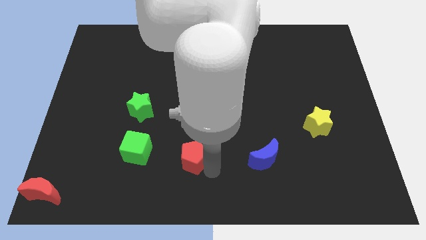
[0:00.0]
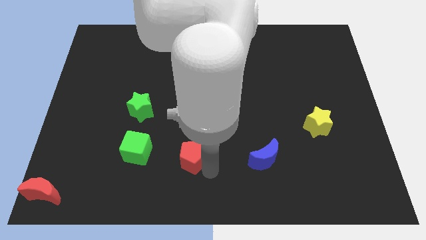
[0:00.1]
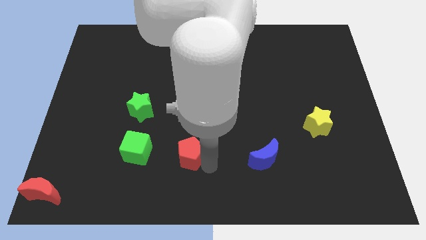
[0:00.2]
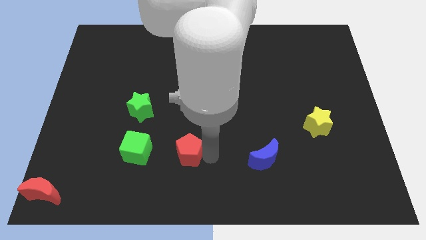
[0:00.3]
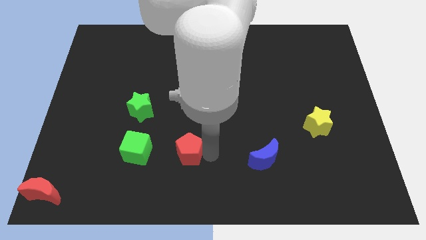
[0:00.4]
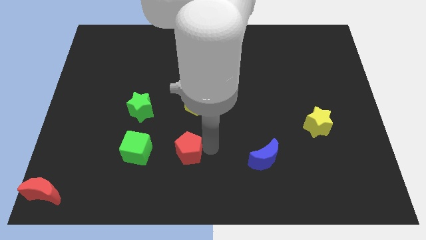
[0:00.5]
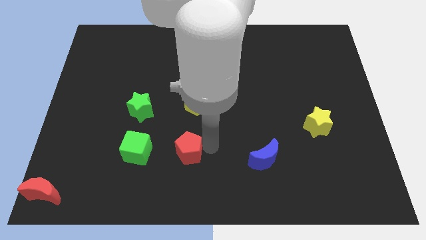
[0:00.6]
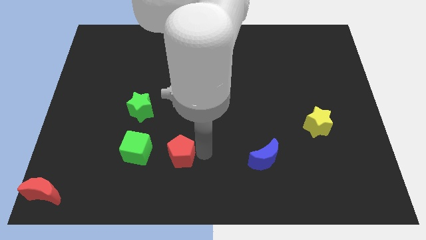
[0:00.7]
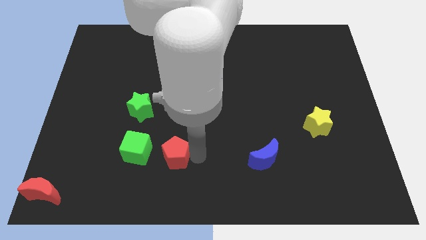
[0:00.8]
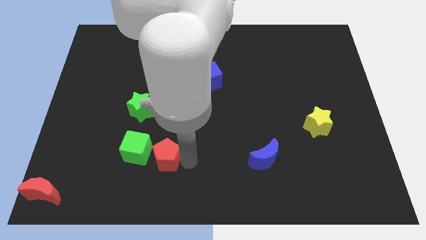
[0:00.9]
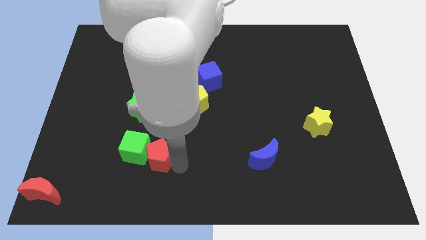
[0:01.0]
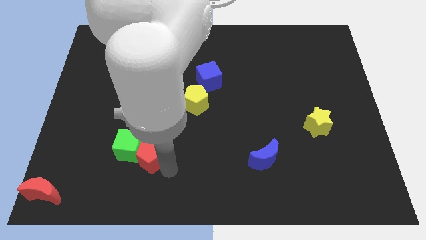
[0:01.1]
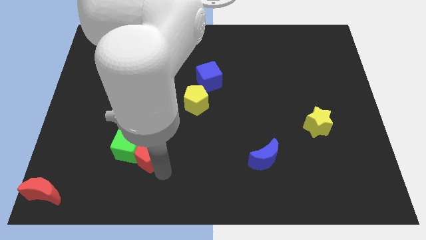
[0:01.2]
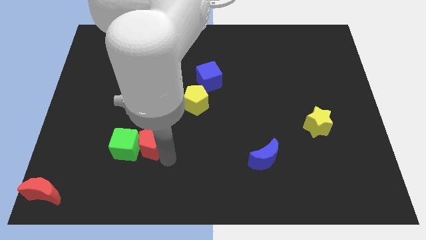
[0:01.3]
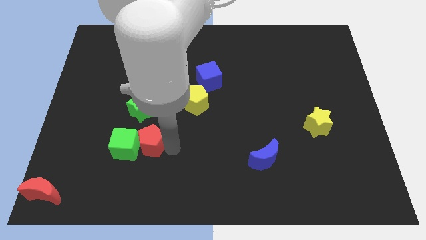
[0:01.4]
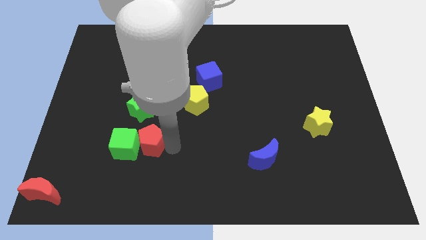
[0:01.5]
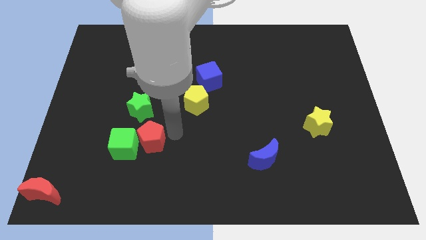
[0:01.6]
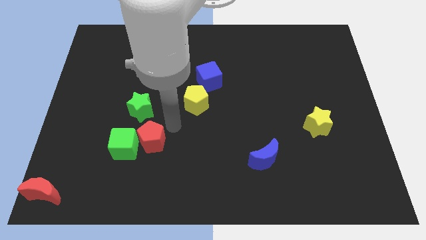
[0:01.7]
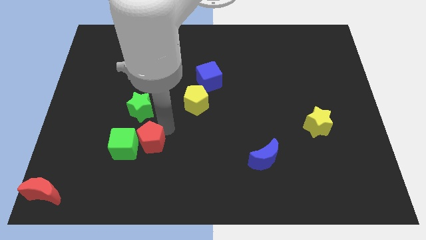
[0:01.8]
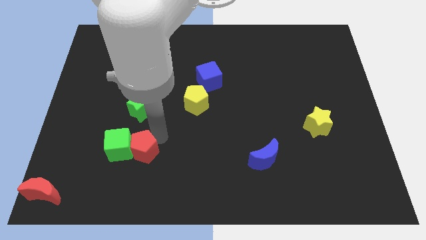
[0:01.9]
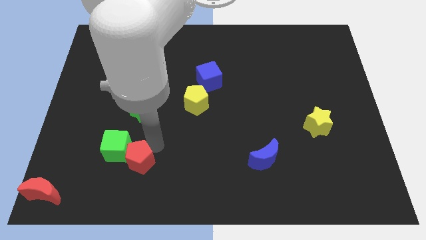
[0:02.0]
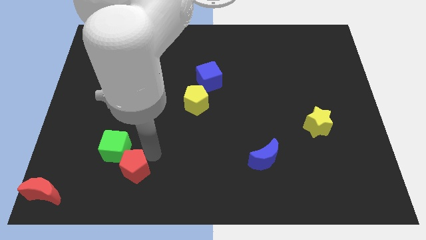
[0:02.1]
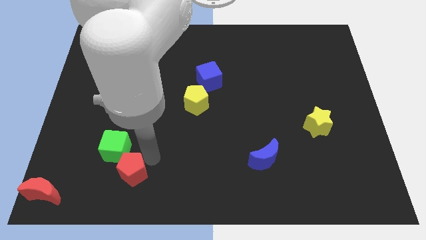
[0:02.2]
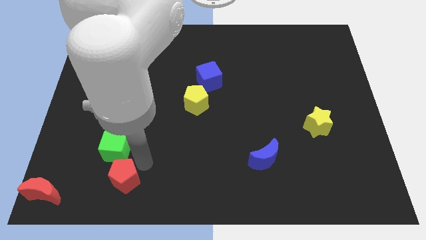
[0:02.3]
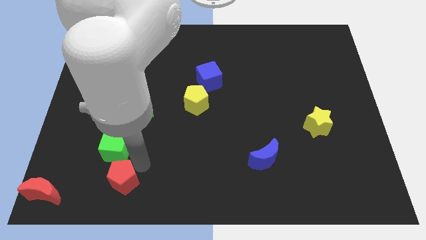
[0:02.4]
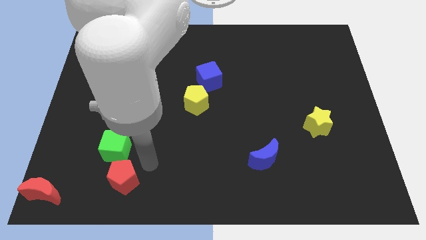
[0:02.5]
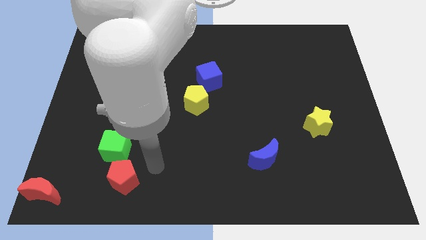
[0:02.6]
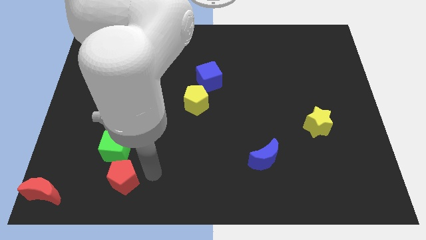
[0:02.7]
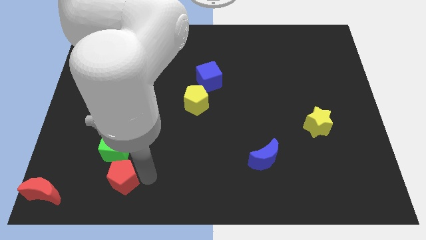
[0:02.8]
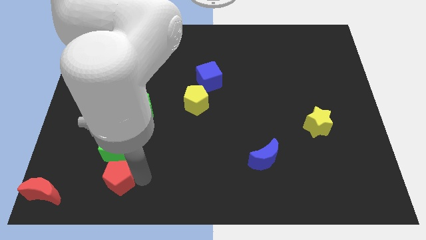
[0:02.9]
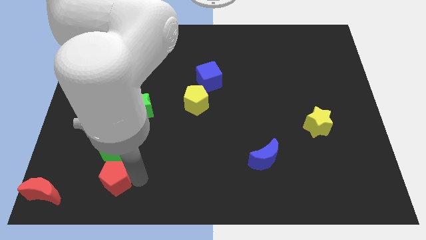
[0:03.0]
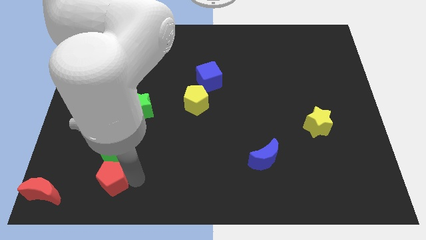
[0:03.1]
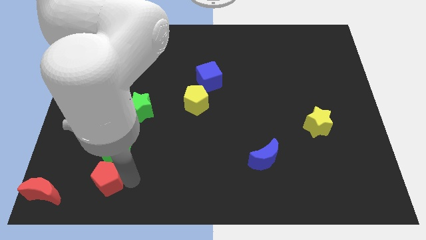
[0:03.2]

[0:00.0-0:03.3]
place red pentagon below green cube

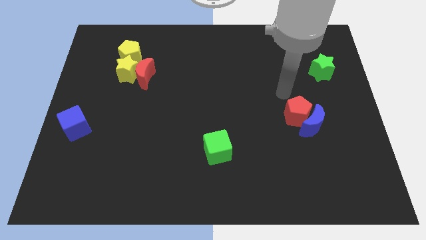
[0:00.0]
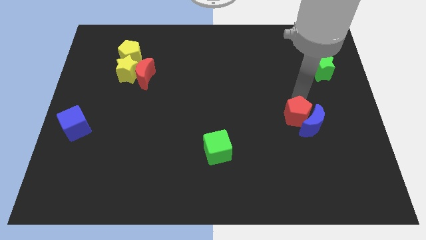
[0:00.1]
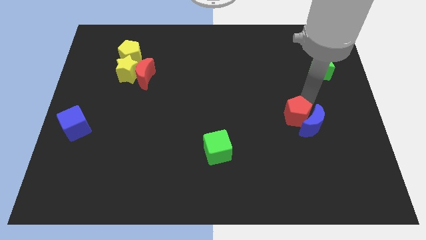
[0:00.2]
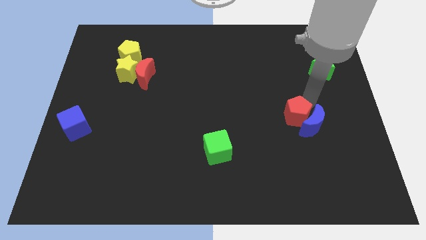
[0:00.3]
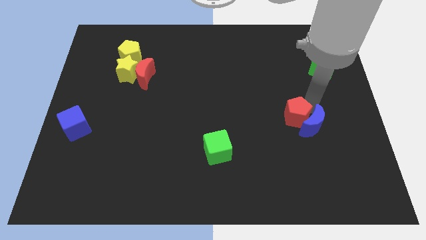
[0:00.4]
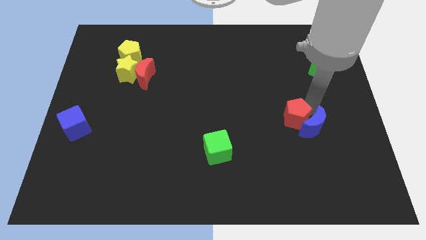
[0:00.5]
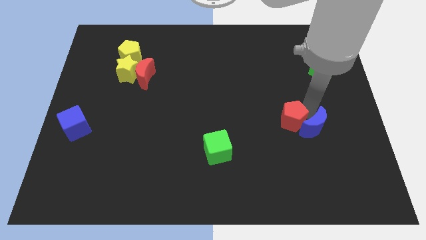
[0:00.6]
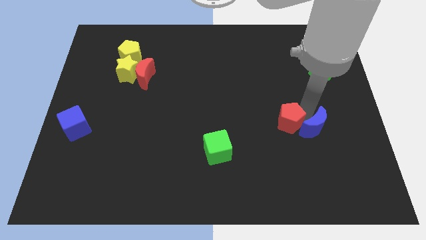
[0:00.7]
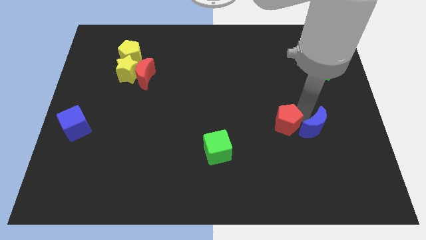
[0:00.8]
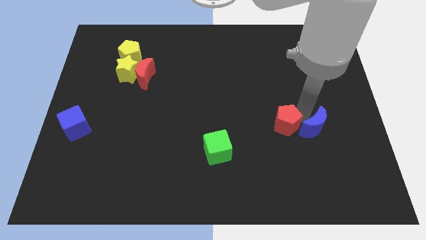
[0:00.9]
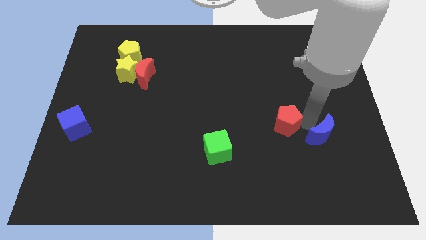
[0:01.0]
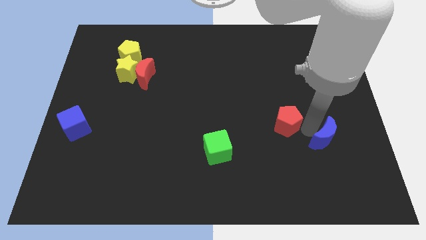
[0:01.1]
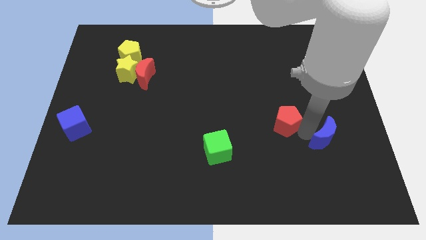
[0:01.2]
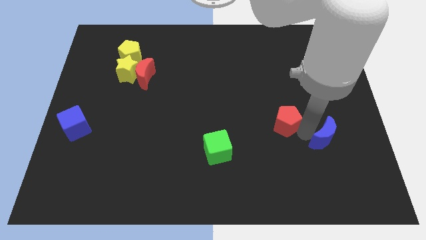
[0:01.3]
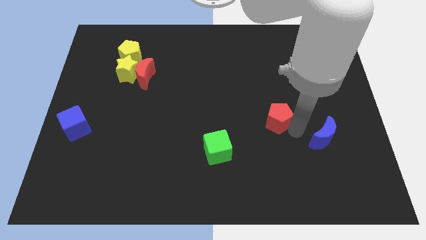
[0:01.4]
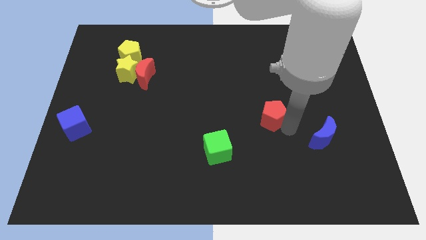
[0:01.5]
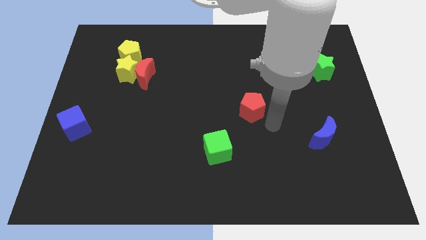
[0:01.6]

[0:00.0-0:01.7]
separate the red pentagon from the blue moon

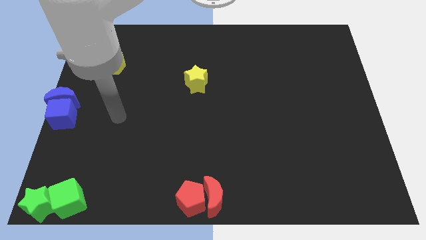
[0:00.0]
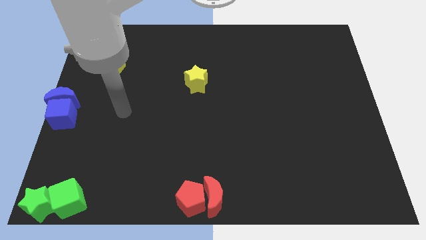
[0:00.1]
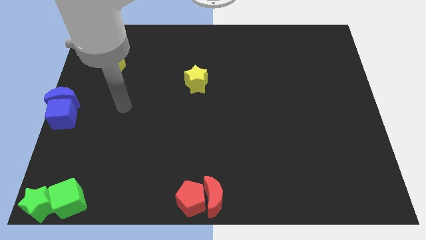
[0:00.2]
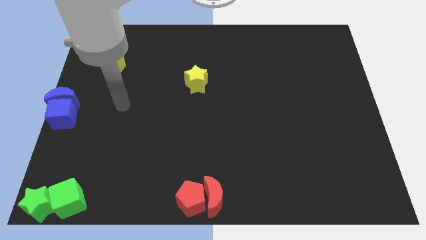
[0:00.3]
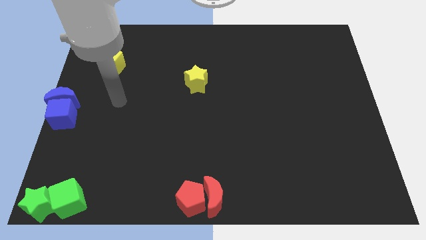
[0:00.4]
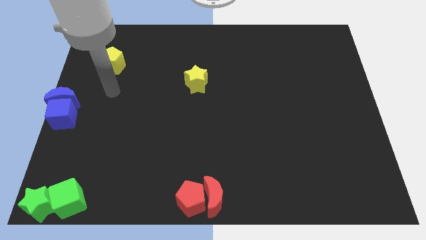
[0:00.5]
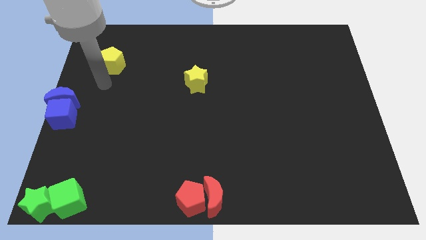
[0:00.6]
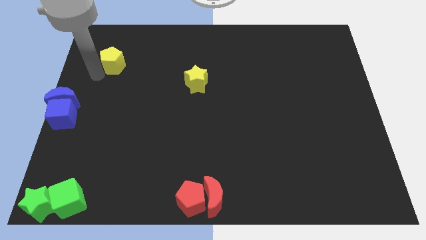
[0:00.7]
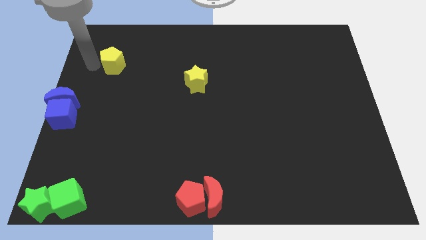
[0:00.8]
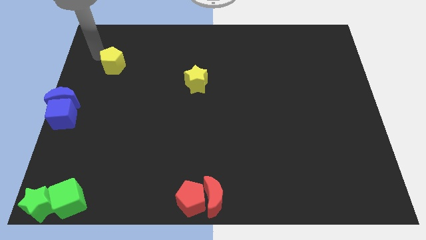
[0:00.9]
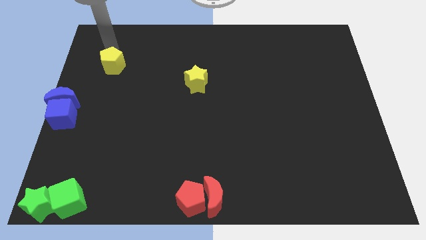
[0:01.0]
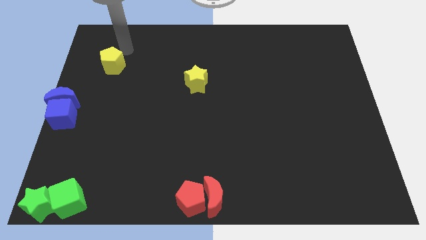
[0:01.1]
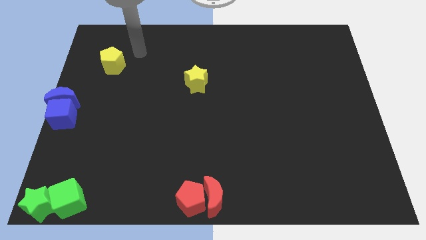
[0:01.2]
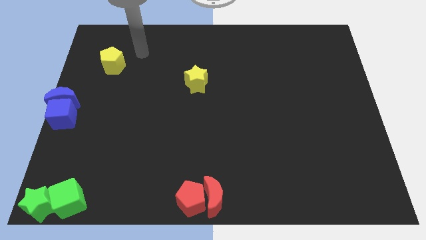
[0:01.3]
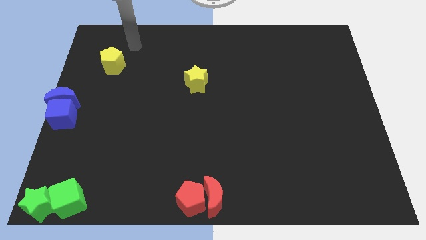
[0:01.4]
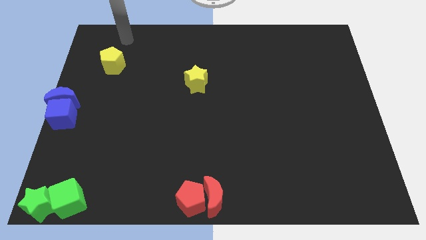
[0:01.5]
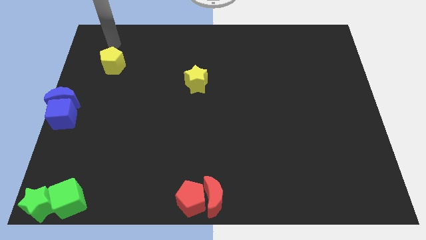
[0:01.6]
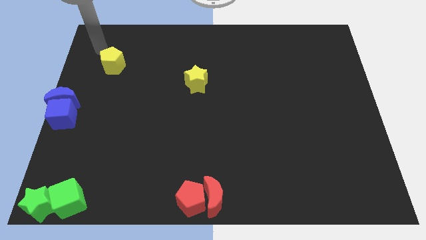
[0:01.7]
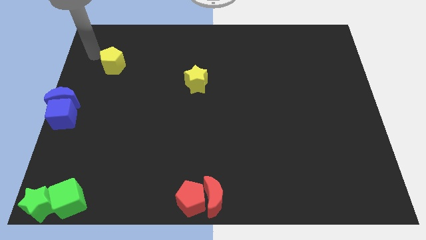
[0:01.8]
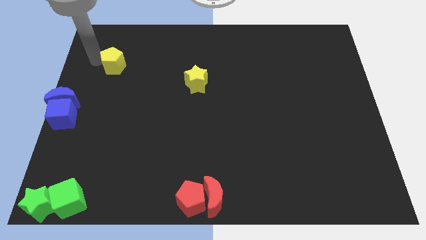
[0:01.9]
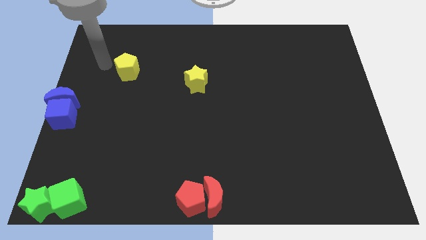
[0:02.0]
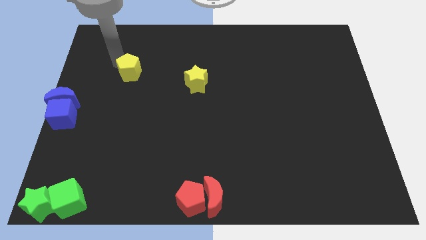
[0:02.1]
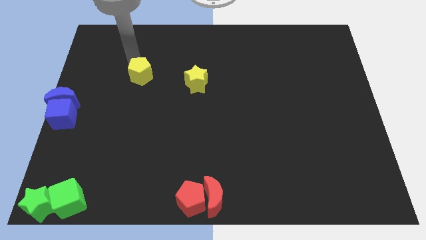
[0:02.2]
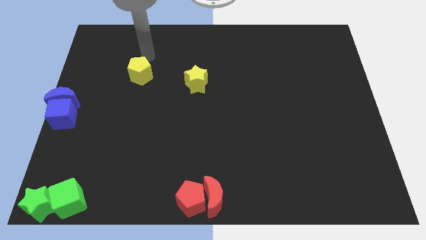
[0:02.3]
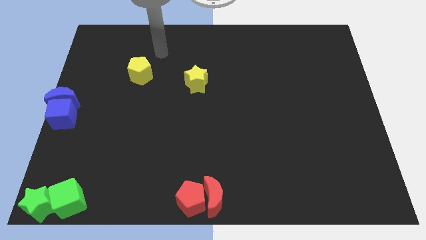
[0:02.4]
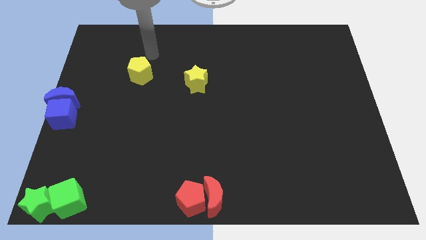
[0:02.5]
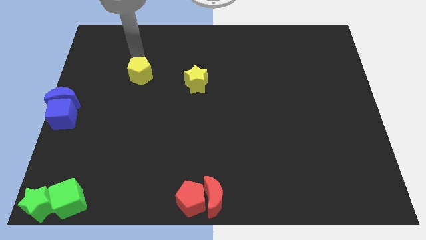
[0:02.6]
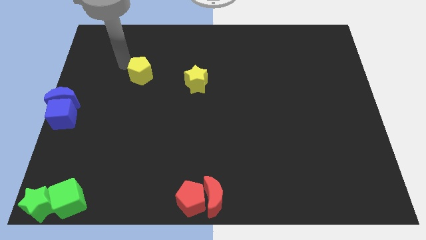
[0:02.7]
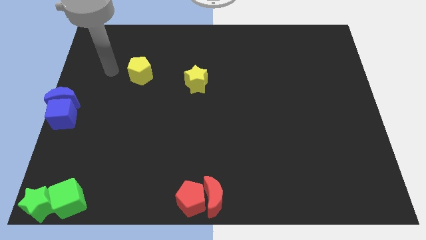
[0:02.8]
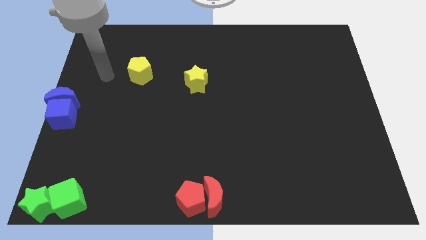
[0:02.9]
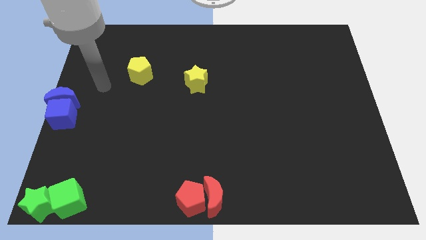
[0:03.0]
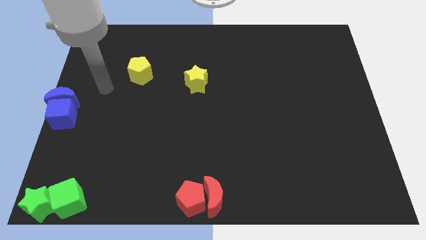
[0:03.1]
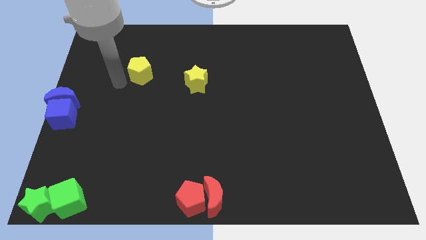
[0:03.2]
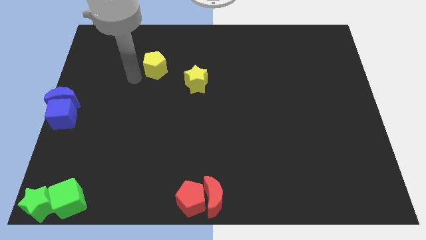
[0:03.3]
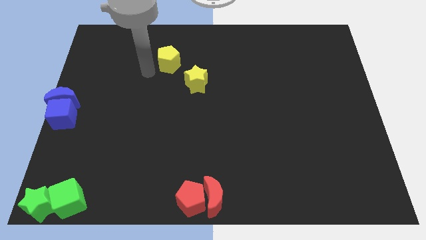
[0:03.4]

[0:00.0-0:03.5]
push the yellow pentagon to the top left side of the yellow star

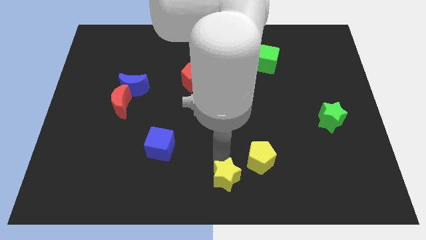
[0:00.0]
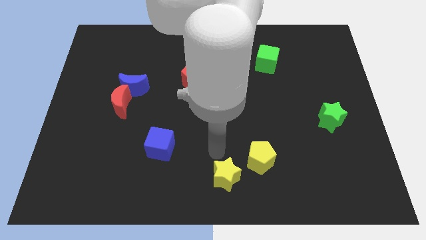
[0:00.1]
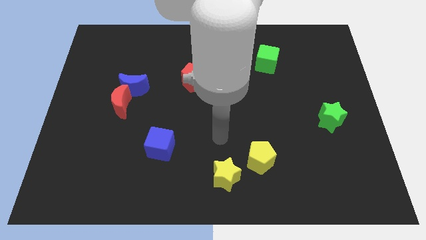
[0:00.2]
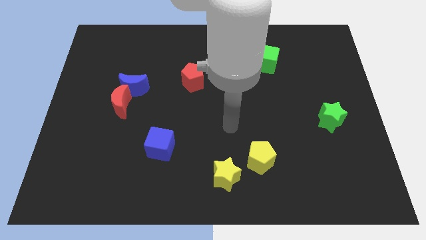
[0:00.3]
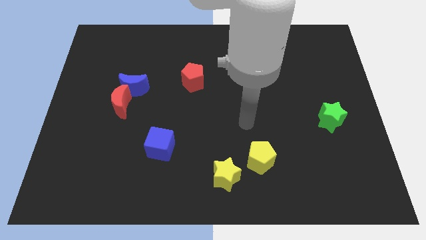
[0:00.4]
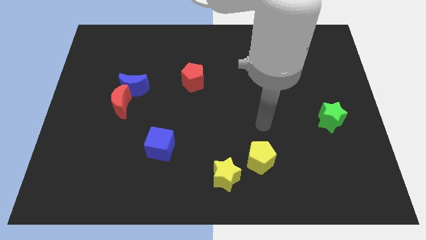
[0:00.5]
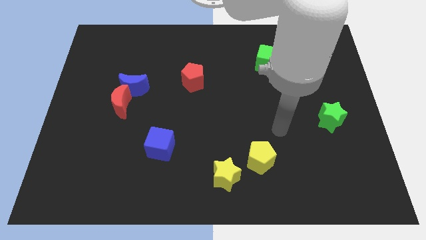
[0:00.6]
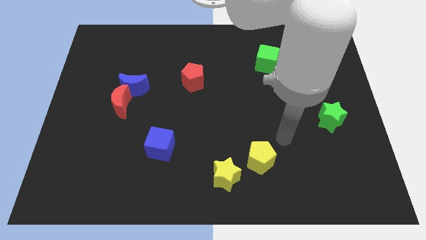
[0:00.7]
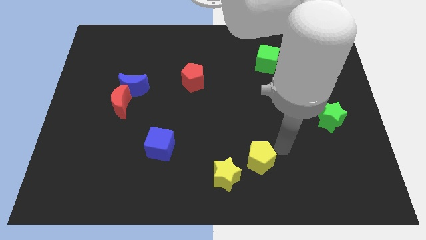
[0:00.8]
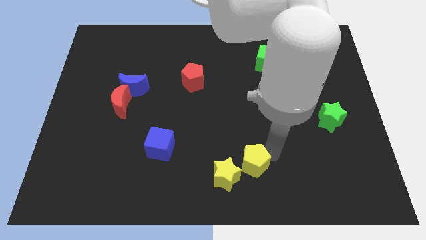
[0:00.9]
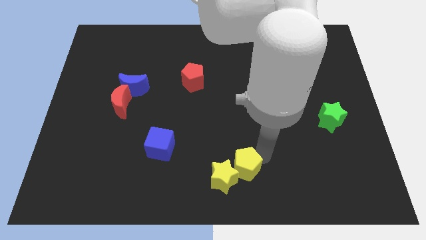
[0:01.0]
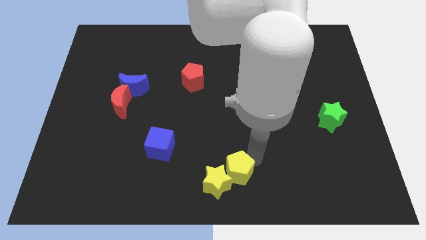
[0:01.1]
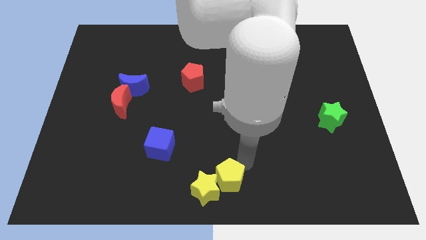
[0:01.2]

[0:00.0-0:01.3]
push yellow pentagon towards center
